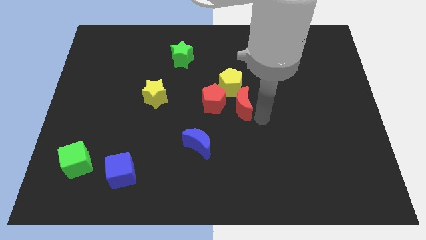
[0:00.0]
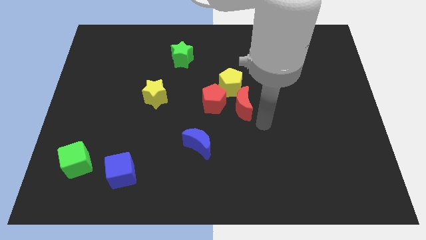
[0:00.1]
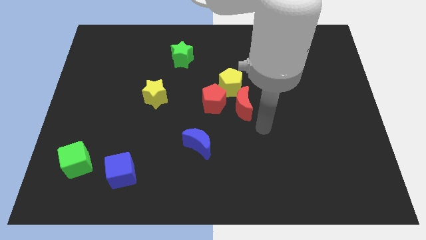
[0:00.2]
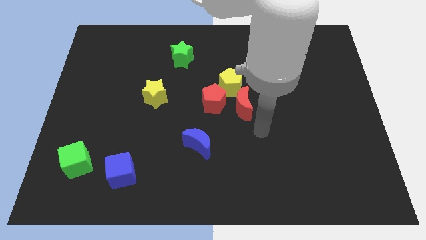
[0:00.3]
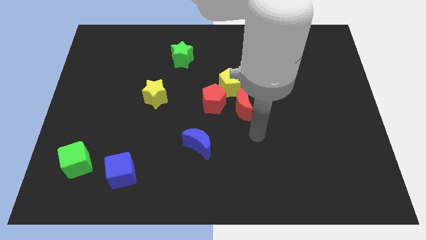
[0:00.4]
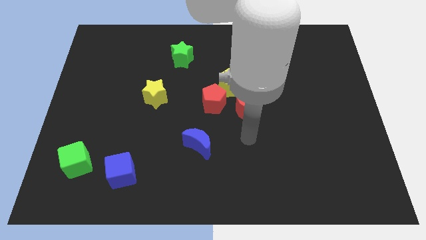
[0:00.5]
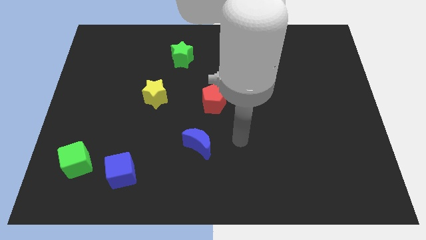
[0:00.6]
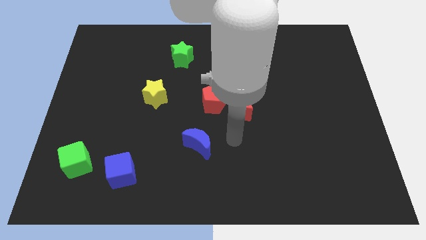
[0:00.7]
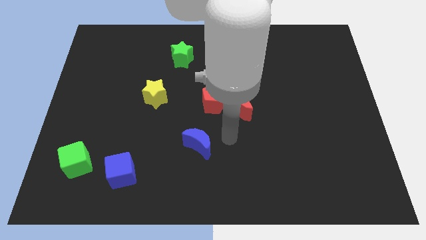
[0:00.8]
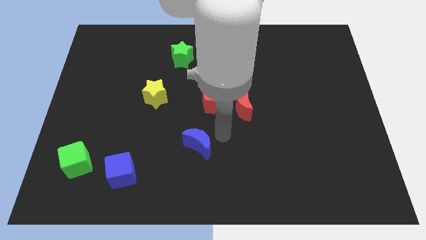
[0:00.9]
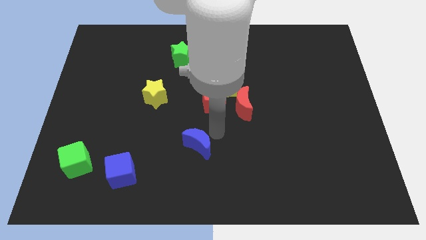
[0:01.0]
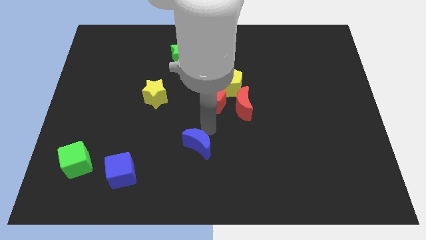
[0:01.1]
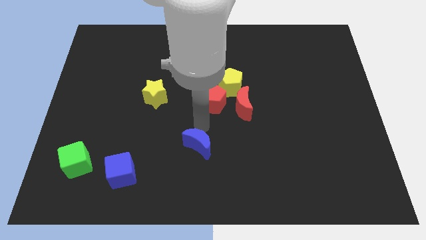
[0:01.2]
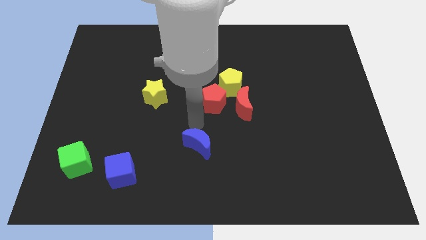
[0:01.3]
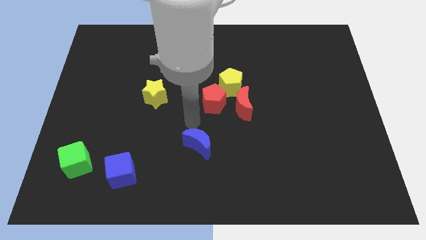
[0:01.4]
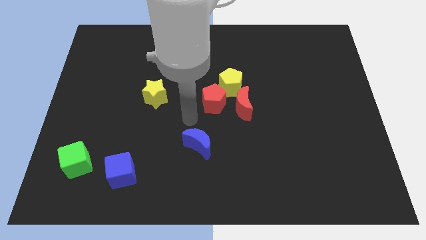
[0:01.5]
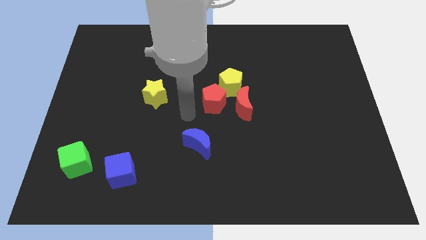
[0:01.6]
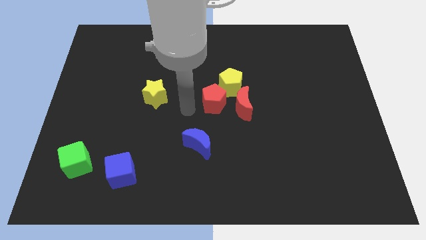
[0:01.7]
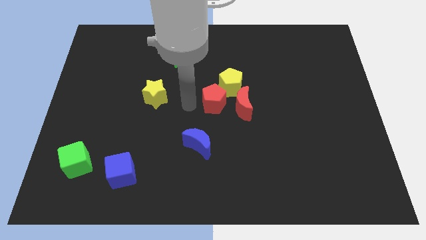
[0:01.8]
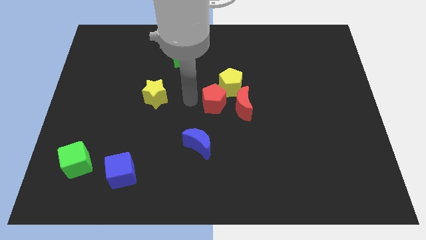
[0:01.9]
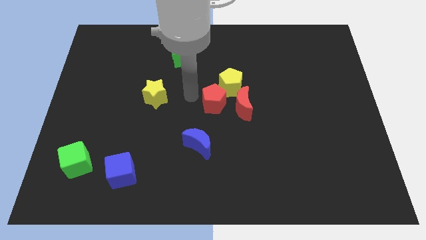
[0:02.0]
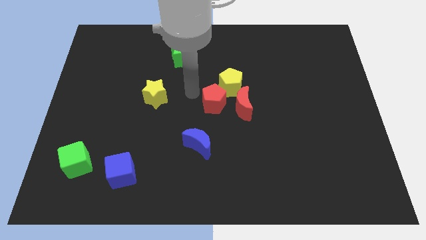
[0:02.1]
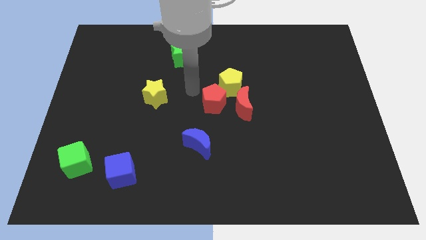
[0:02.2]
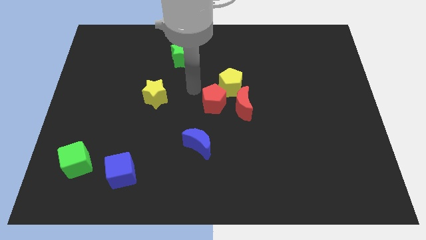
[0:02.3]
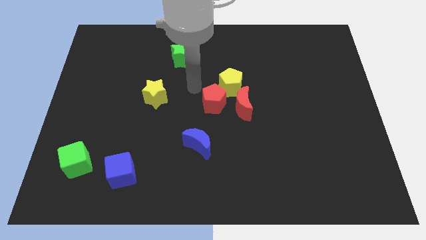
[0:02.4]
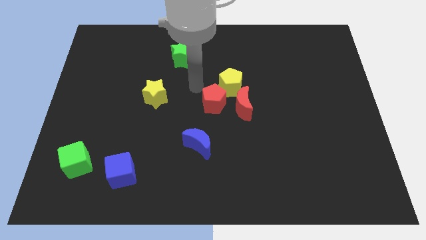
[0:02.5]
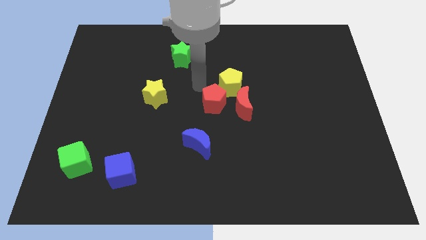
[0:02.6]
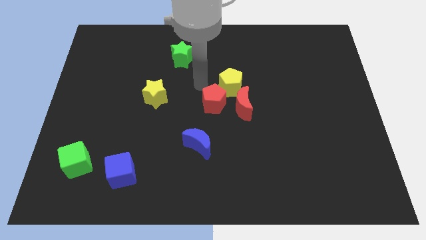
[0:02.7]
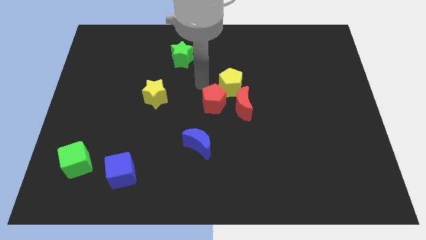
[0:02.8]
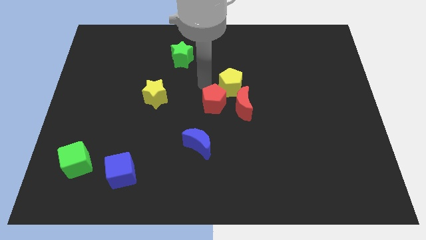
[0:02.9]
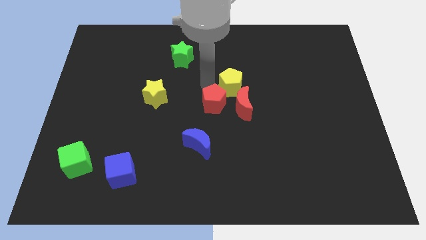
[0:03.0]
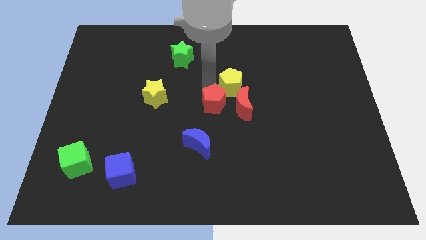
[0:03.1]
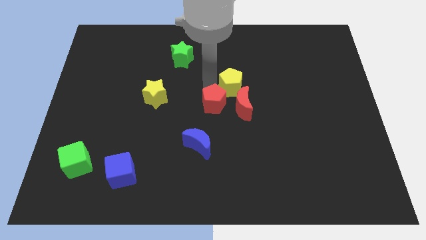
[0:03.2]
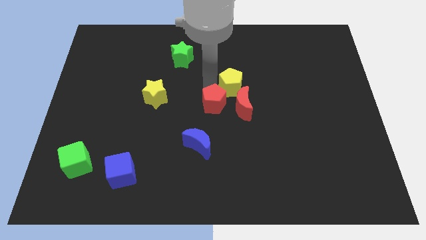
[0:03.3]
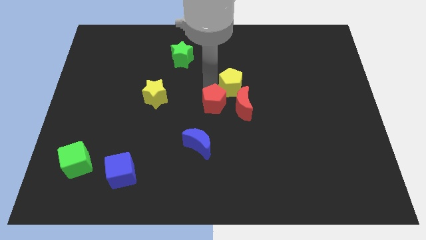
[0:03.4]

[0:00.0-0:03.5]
move your arm to the top of the red pentagon

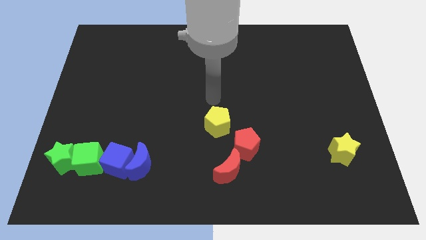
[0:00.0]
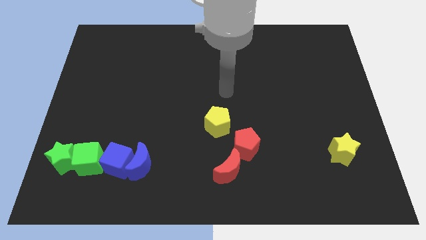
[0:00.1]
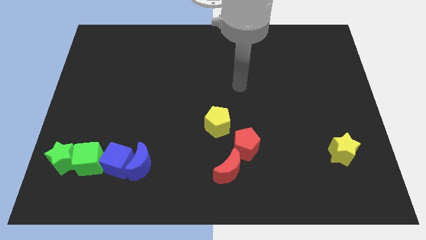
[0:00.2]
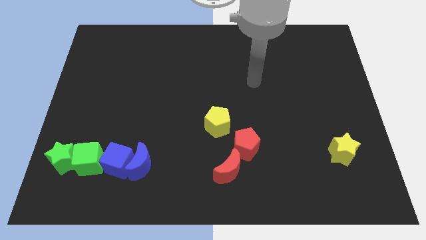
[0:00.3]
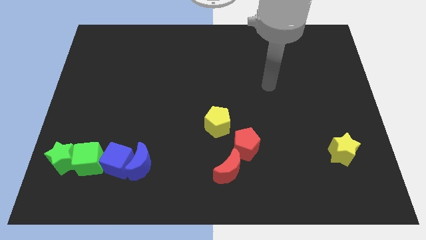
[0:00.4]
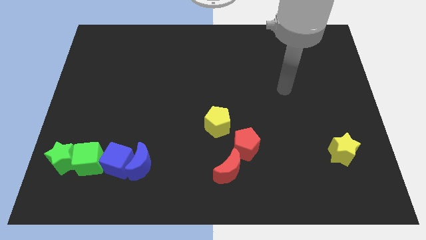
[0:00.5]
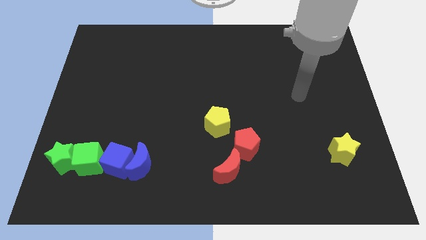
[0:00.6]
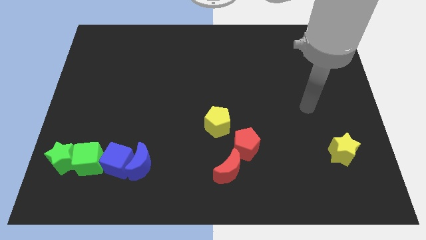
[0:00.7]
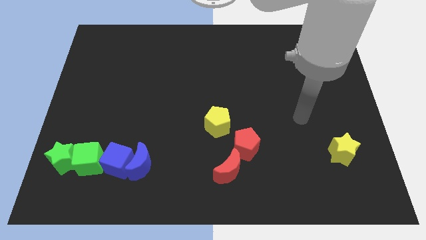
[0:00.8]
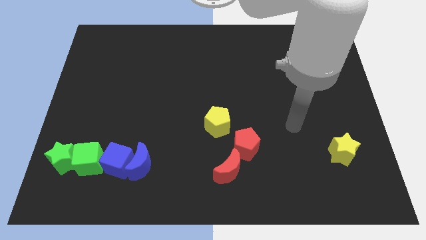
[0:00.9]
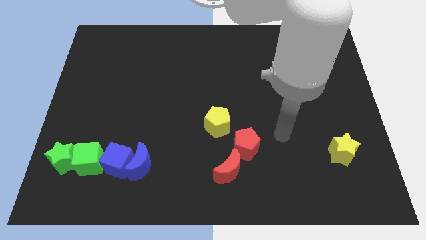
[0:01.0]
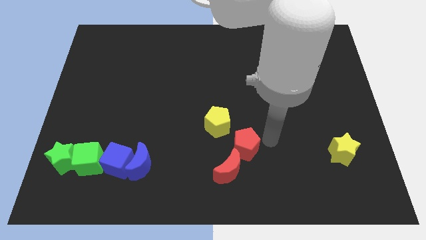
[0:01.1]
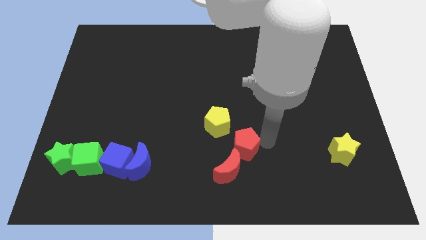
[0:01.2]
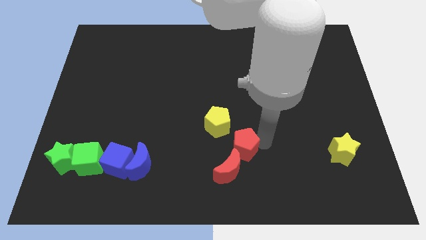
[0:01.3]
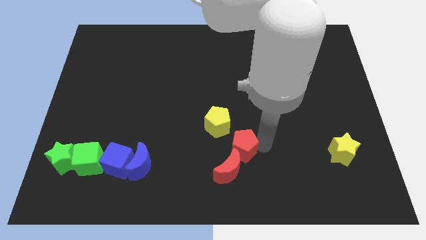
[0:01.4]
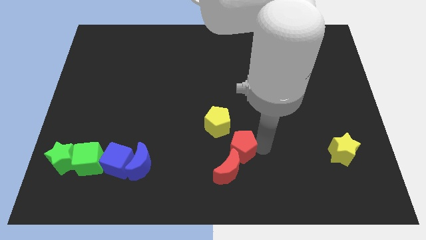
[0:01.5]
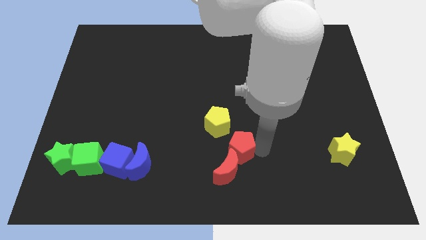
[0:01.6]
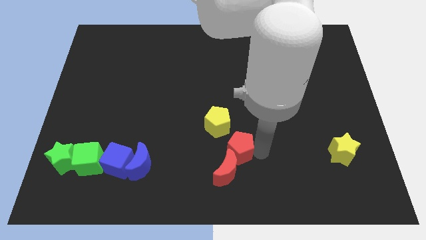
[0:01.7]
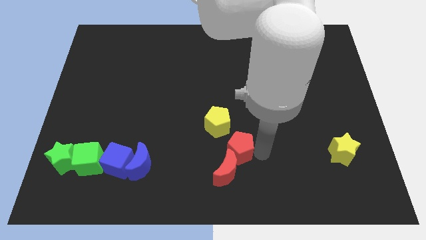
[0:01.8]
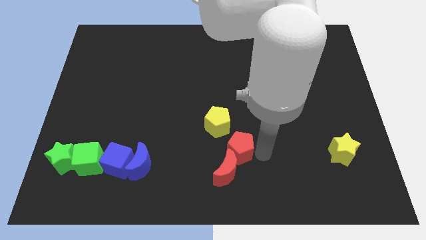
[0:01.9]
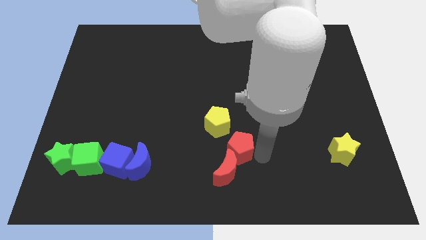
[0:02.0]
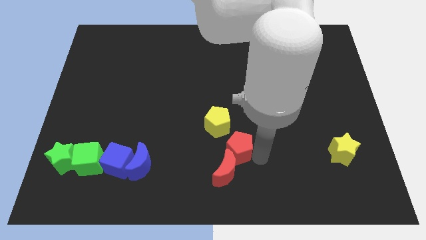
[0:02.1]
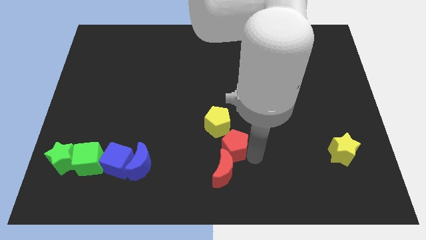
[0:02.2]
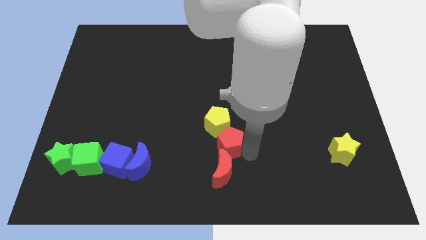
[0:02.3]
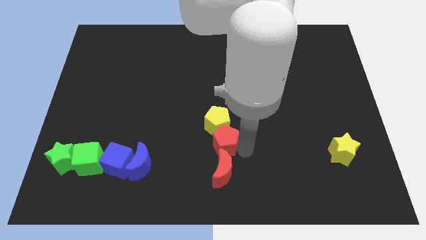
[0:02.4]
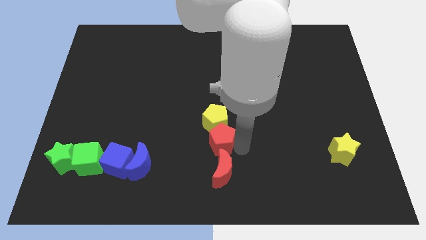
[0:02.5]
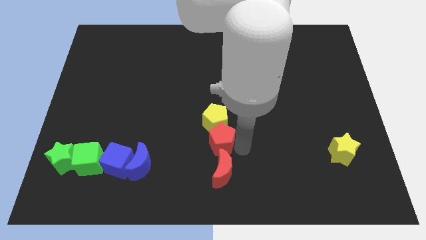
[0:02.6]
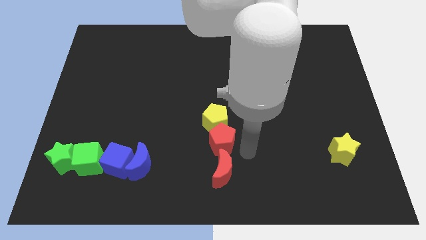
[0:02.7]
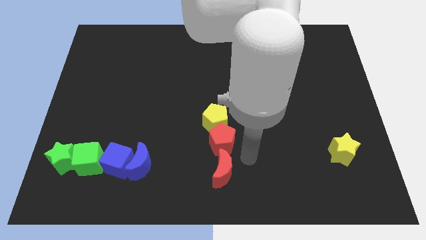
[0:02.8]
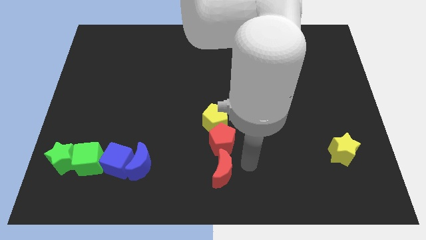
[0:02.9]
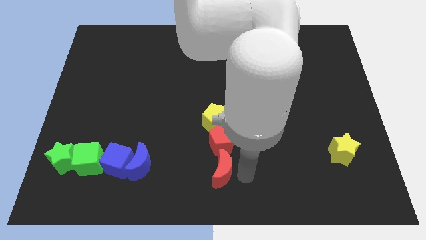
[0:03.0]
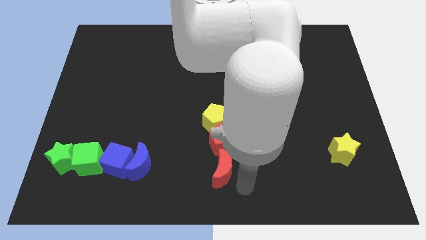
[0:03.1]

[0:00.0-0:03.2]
move the red moon to the bottom of red pentagon

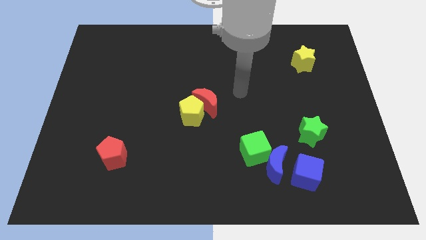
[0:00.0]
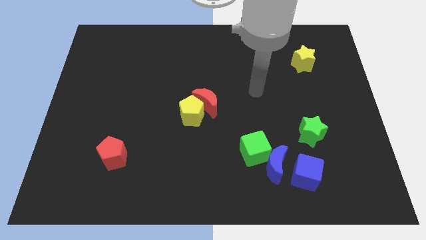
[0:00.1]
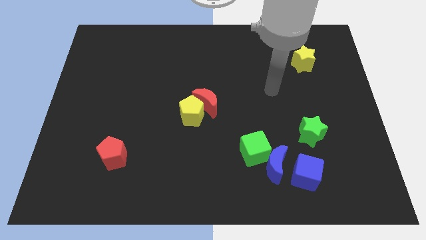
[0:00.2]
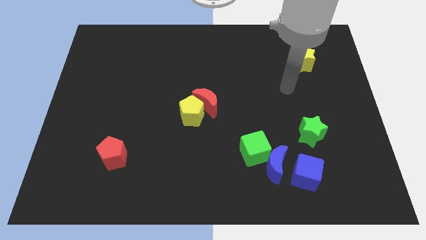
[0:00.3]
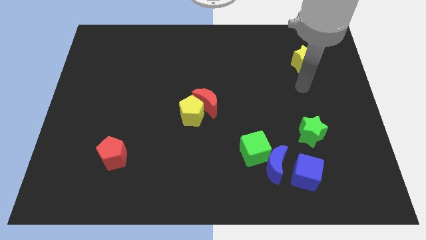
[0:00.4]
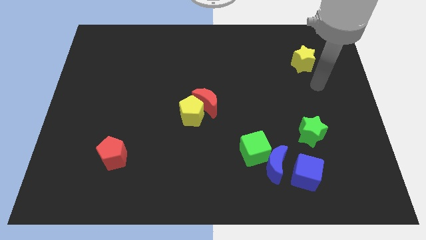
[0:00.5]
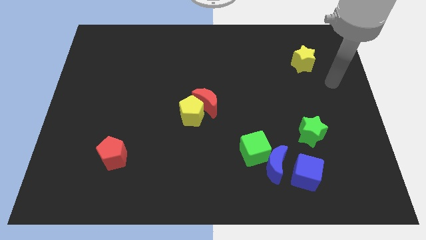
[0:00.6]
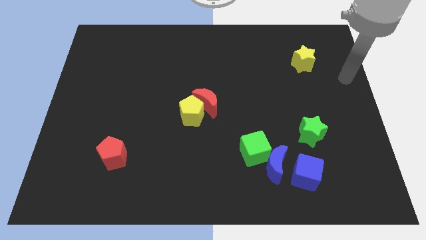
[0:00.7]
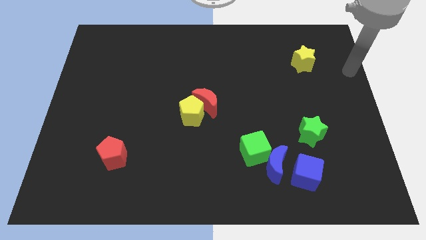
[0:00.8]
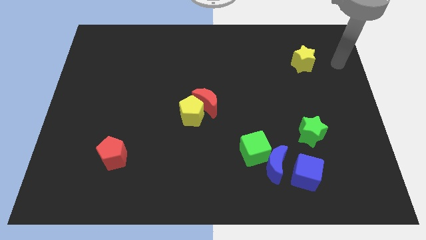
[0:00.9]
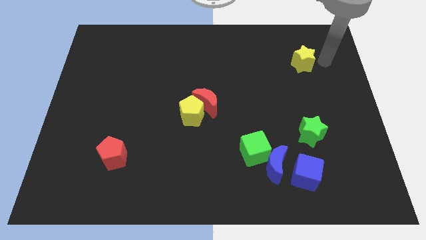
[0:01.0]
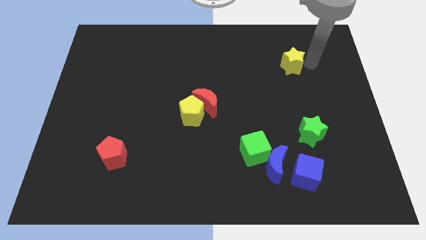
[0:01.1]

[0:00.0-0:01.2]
tap the yellow star on its right

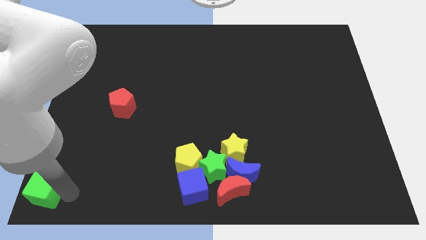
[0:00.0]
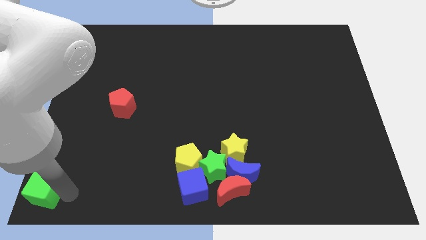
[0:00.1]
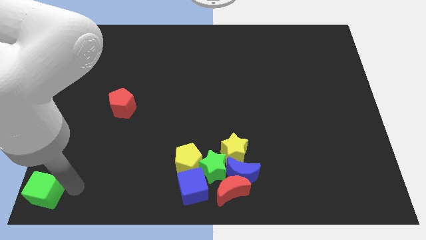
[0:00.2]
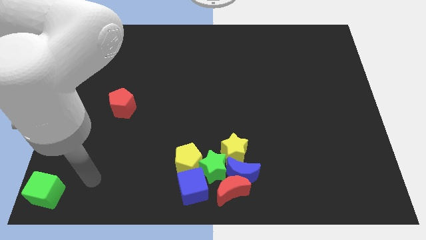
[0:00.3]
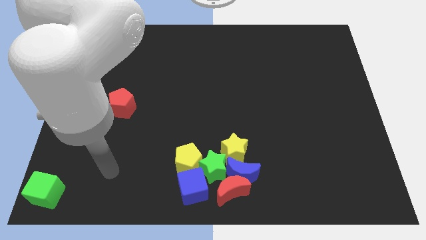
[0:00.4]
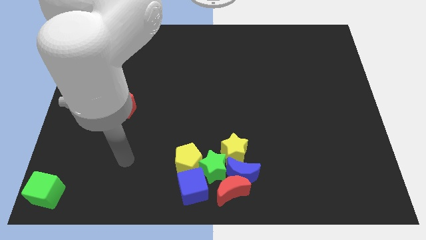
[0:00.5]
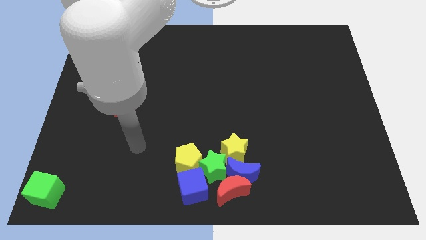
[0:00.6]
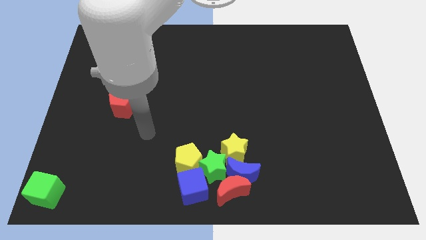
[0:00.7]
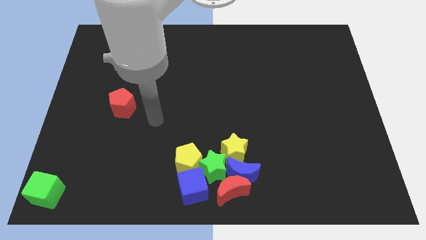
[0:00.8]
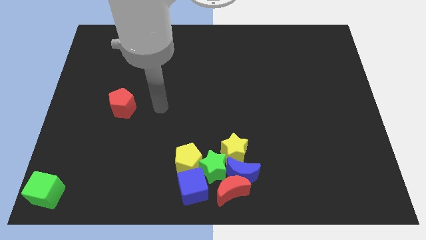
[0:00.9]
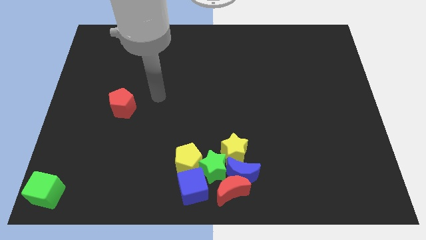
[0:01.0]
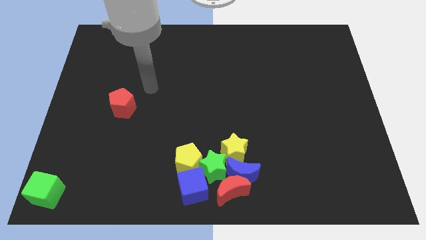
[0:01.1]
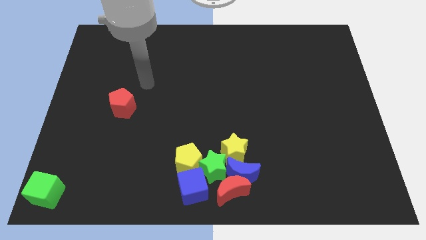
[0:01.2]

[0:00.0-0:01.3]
move the arm away from the green cube
